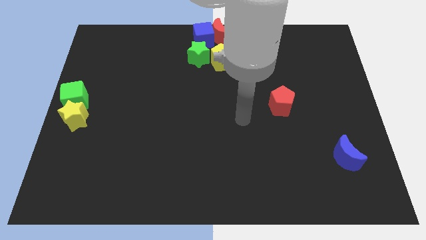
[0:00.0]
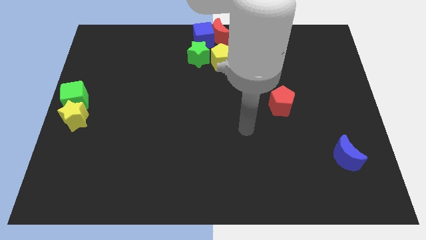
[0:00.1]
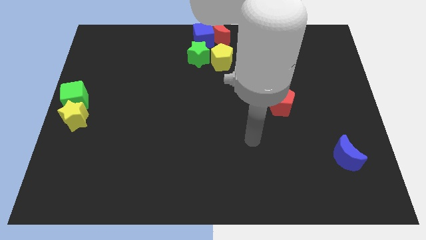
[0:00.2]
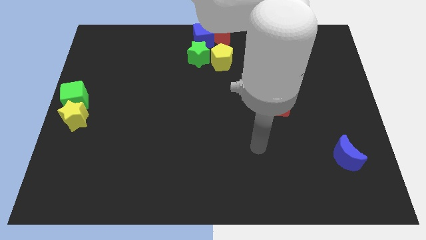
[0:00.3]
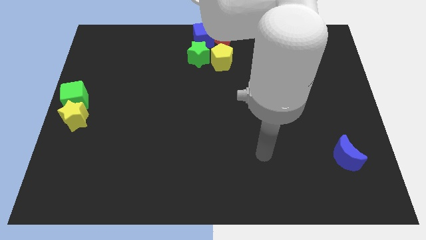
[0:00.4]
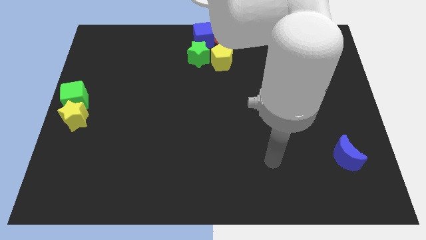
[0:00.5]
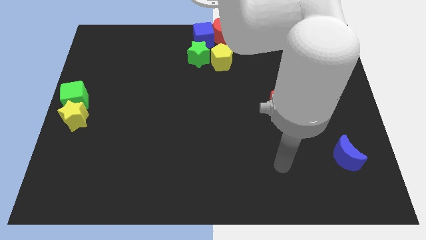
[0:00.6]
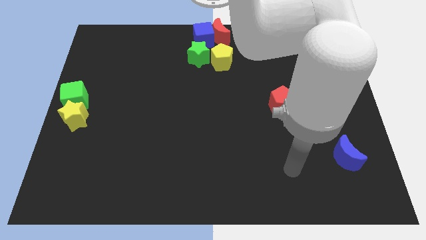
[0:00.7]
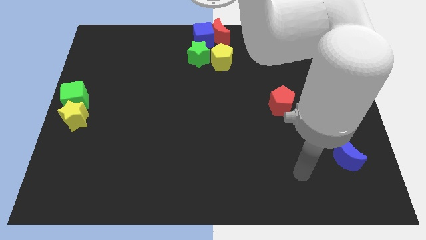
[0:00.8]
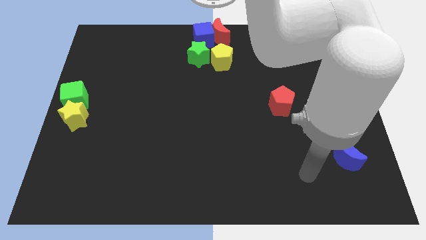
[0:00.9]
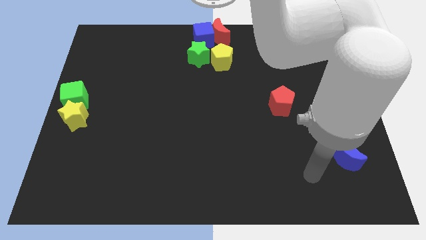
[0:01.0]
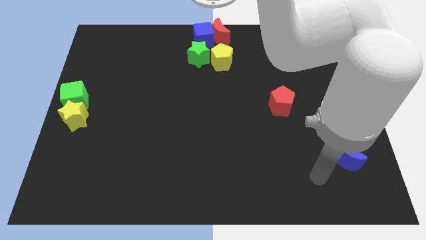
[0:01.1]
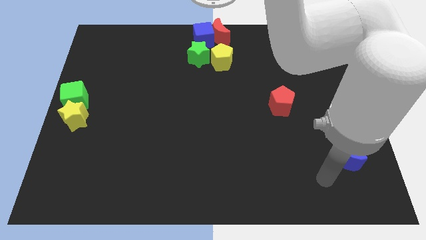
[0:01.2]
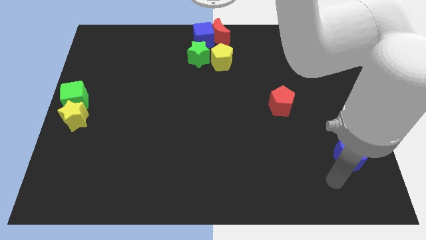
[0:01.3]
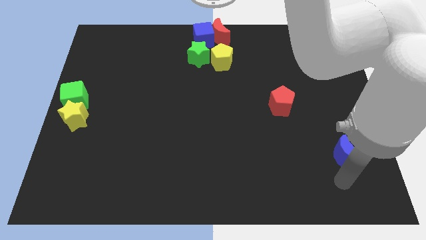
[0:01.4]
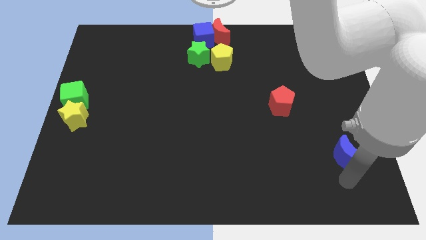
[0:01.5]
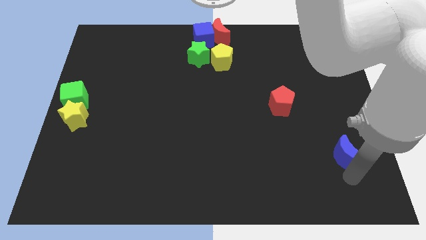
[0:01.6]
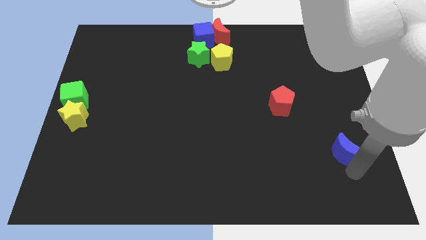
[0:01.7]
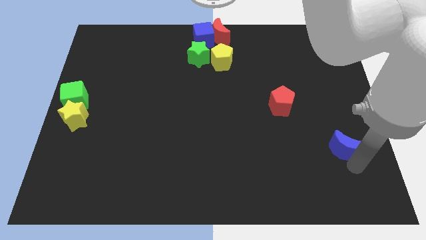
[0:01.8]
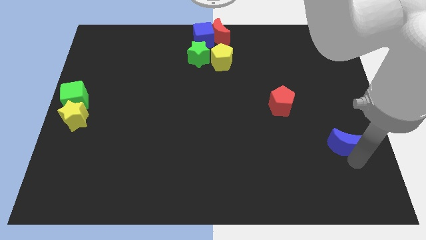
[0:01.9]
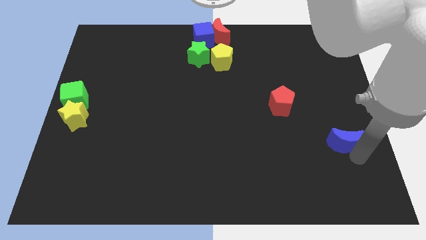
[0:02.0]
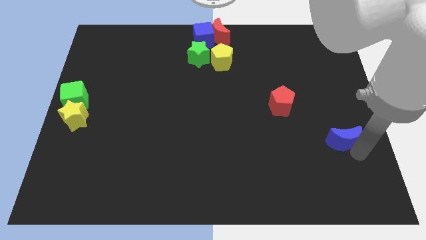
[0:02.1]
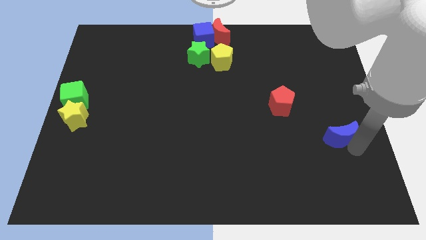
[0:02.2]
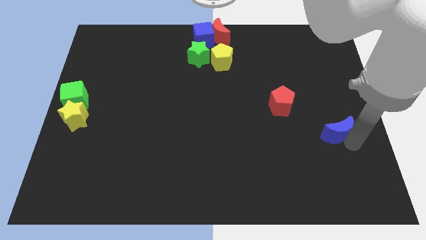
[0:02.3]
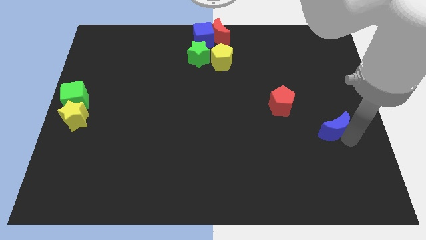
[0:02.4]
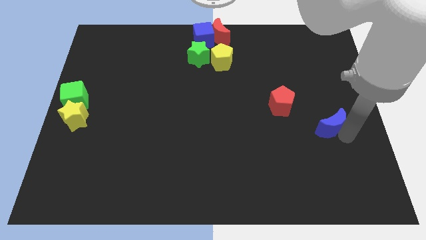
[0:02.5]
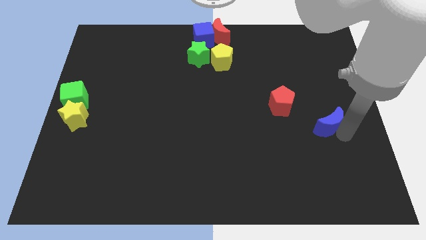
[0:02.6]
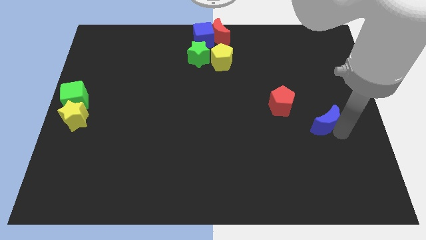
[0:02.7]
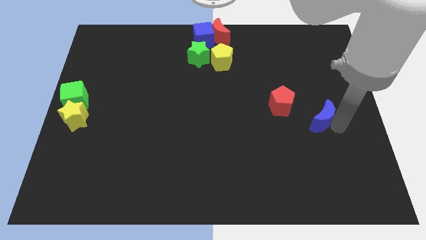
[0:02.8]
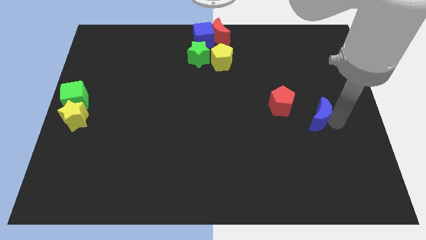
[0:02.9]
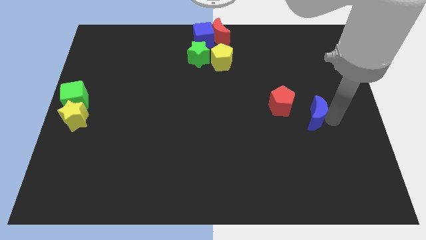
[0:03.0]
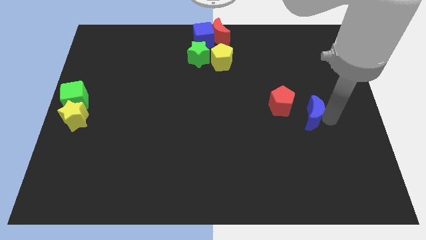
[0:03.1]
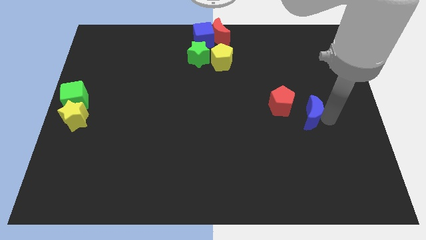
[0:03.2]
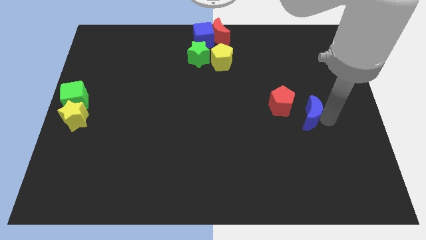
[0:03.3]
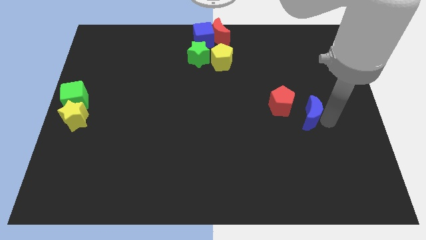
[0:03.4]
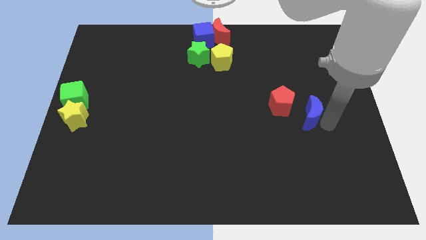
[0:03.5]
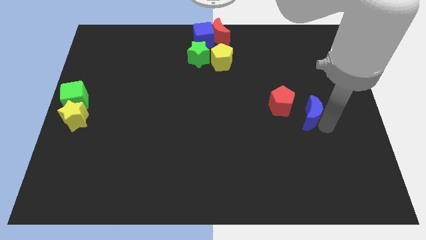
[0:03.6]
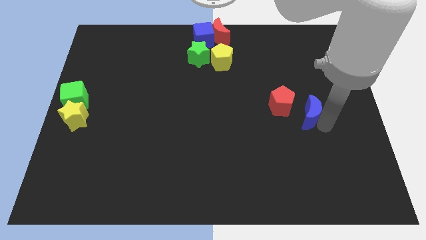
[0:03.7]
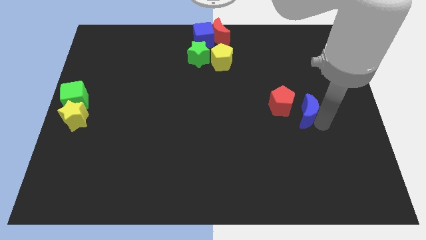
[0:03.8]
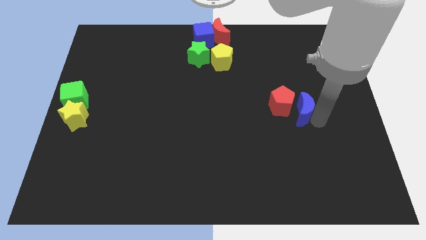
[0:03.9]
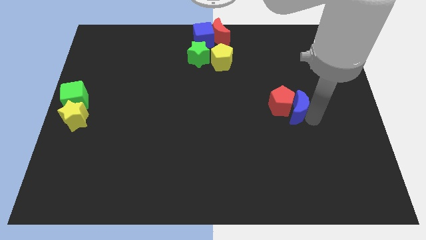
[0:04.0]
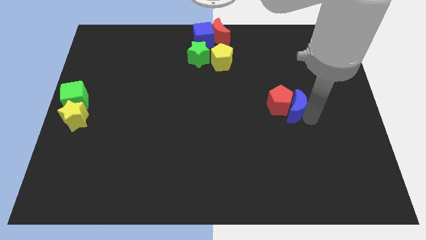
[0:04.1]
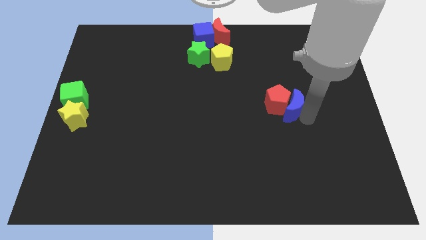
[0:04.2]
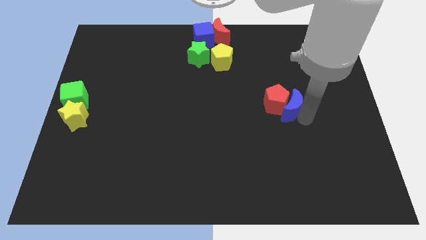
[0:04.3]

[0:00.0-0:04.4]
slide the blue crescent into the red pentagon

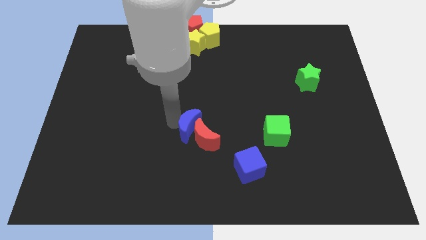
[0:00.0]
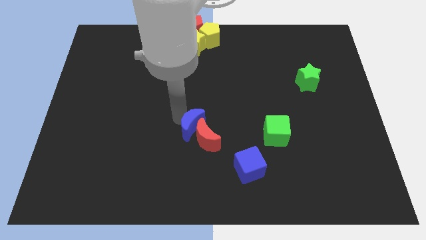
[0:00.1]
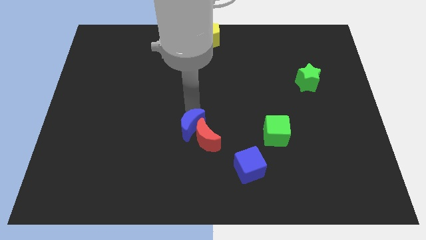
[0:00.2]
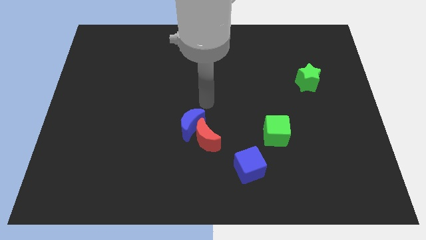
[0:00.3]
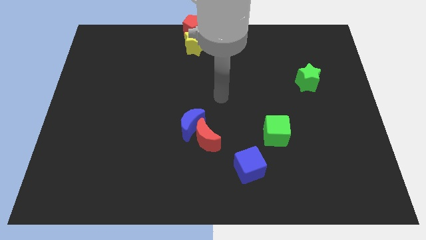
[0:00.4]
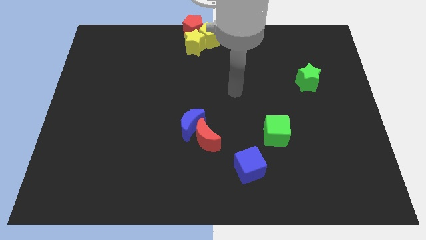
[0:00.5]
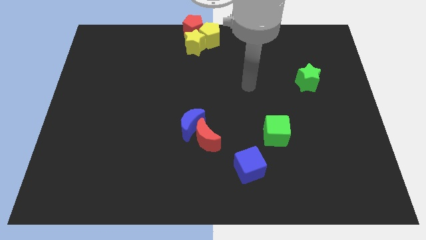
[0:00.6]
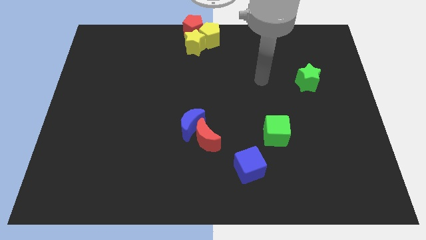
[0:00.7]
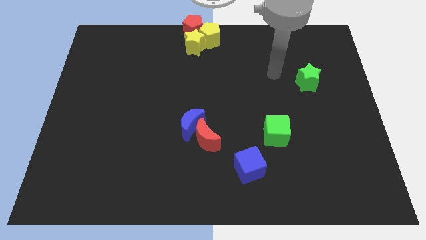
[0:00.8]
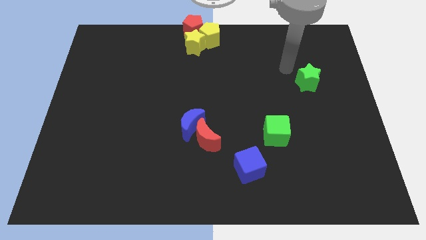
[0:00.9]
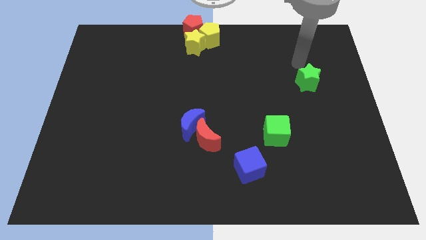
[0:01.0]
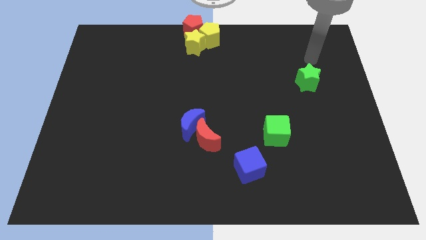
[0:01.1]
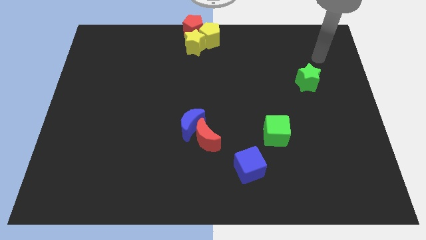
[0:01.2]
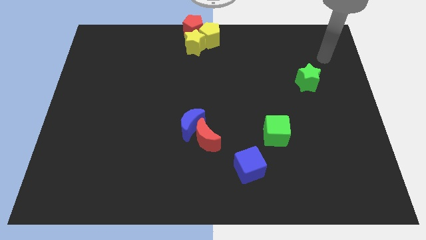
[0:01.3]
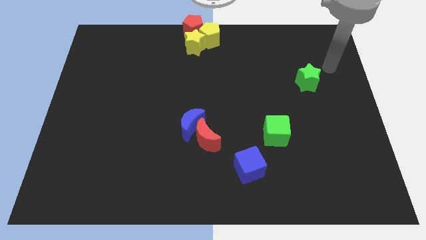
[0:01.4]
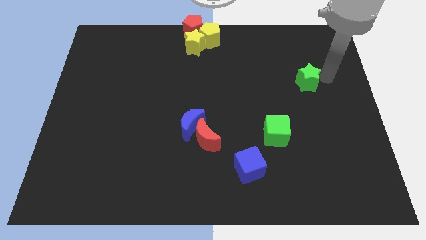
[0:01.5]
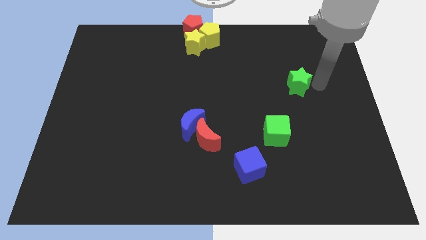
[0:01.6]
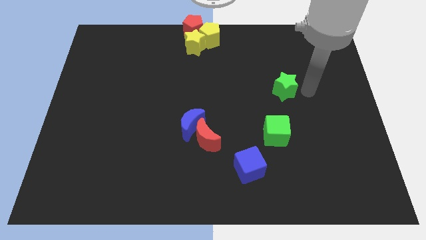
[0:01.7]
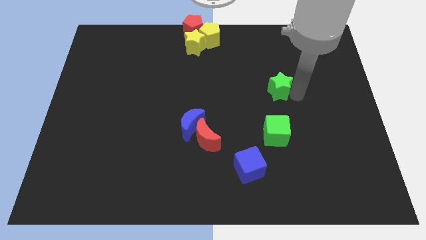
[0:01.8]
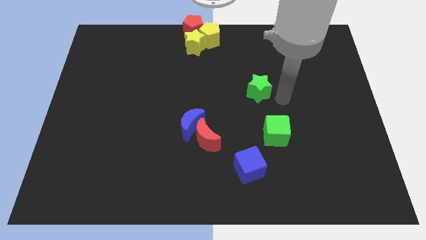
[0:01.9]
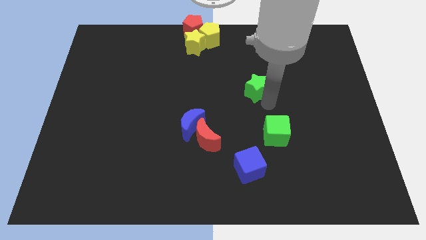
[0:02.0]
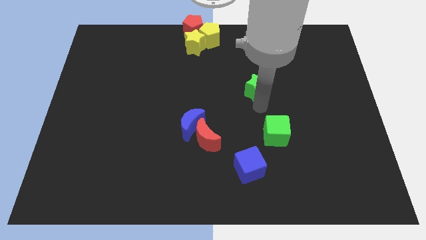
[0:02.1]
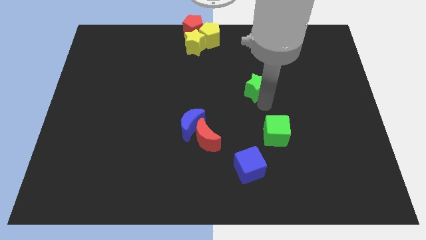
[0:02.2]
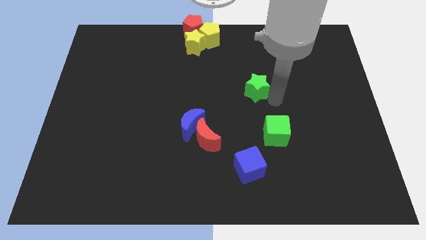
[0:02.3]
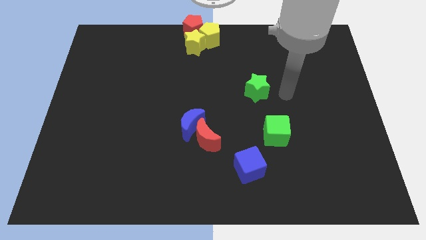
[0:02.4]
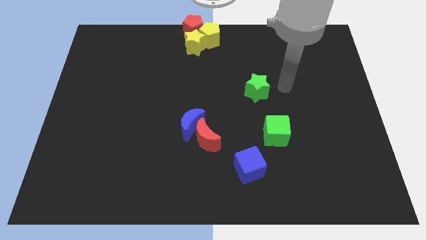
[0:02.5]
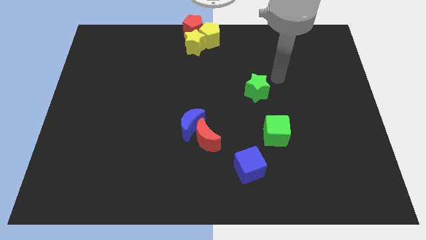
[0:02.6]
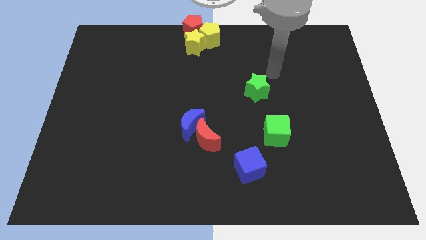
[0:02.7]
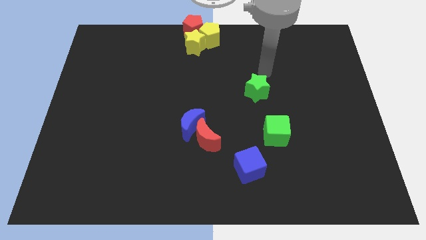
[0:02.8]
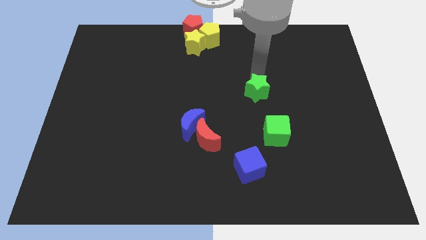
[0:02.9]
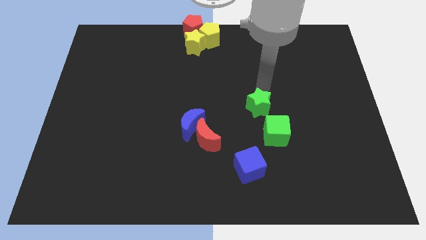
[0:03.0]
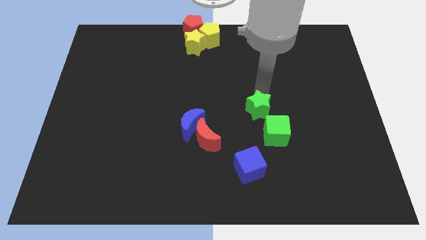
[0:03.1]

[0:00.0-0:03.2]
slide the green star diagonally top left to the green cube

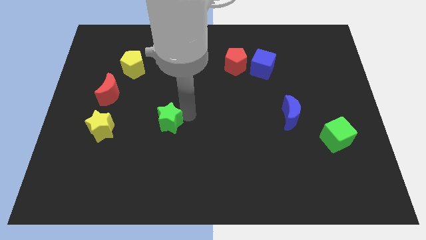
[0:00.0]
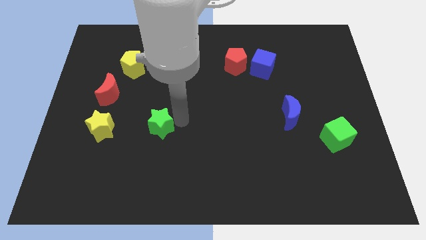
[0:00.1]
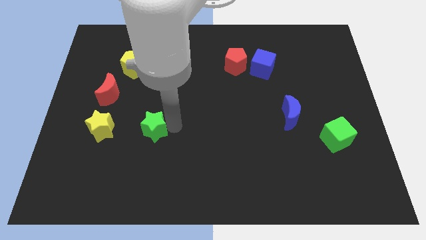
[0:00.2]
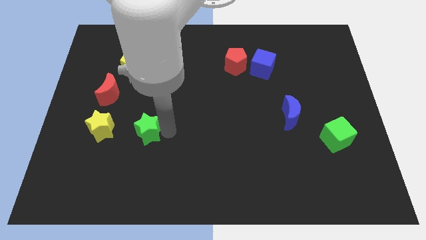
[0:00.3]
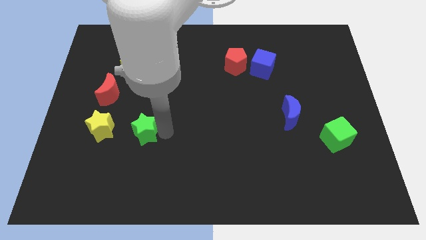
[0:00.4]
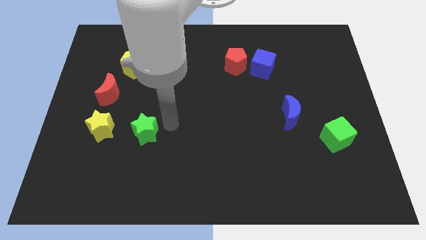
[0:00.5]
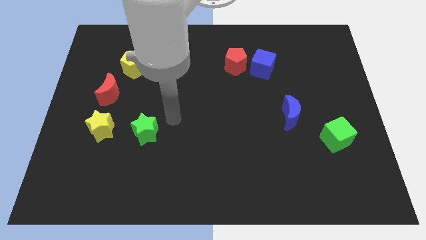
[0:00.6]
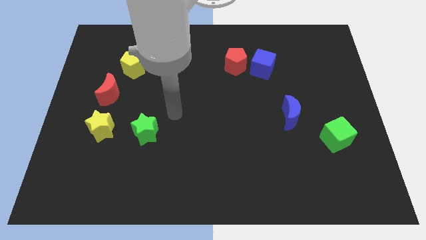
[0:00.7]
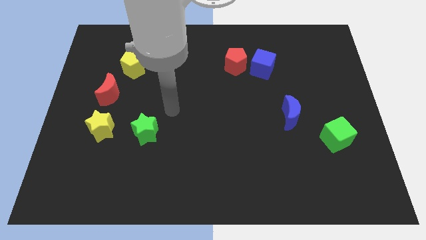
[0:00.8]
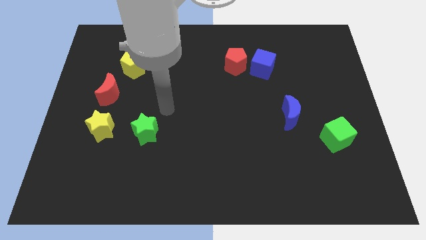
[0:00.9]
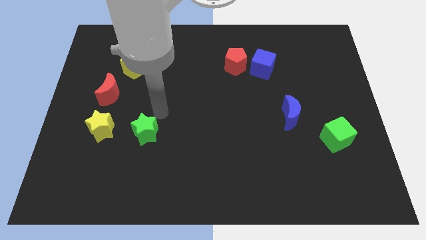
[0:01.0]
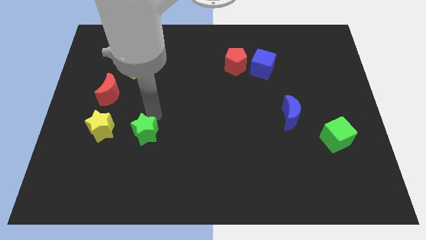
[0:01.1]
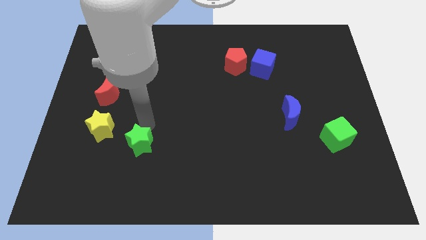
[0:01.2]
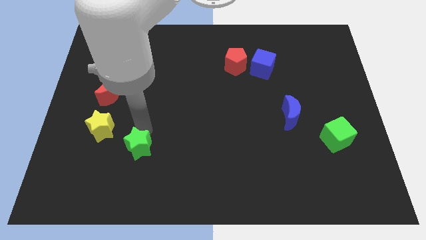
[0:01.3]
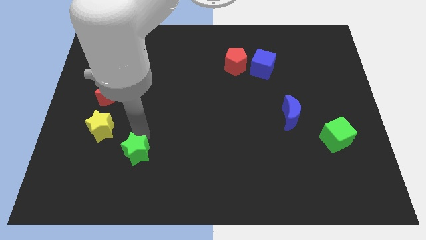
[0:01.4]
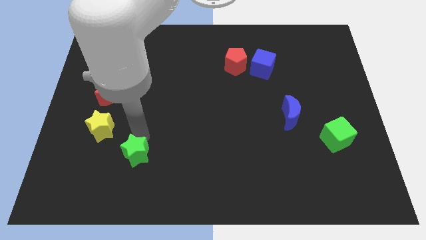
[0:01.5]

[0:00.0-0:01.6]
push green star parallel to the yellow star
